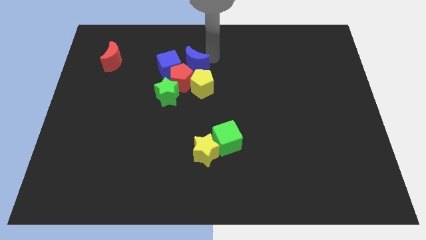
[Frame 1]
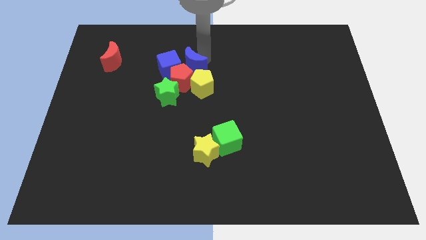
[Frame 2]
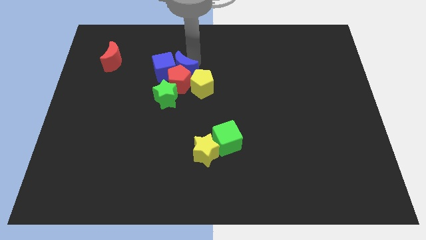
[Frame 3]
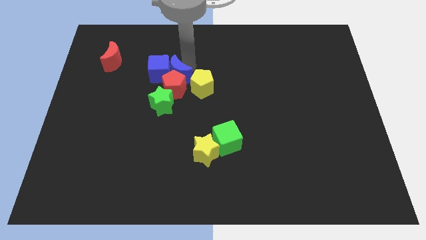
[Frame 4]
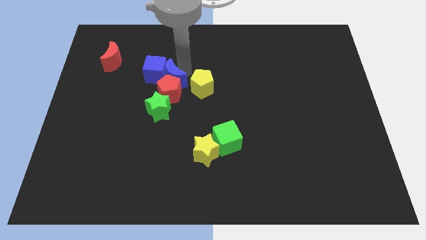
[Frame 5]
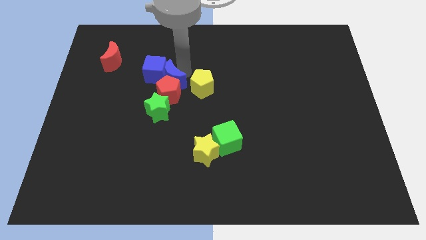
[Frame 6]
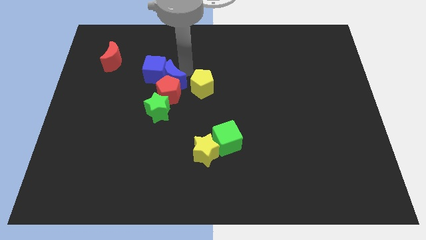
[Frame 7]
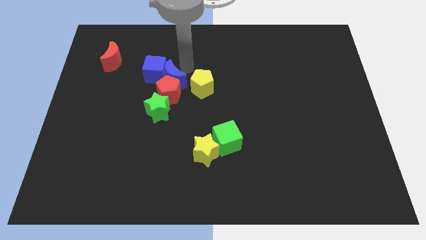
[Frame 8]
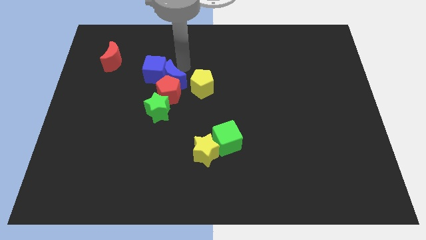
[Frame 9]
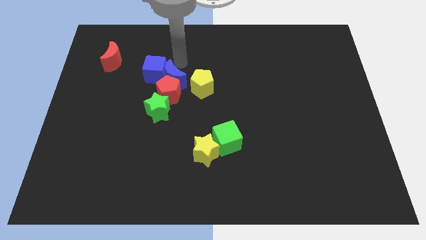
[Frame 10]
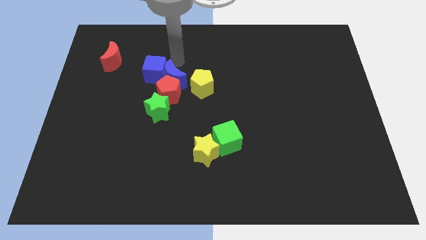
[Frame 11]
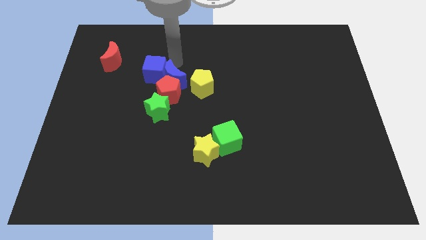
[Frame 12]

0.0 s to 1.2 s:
push the blue moon slightly to the bottom

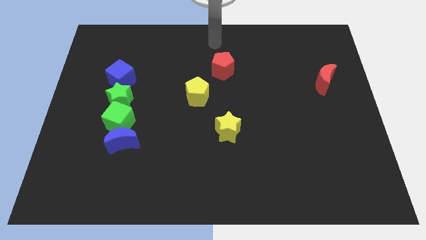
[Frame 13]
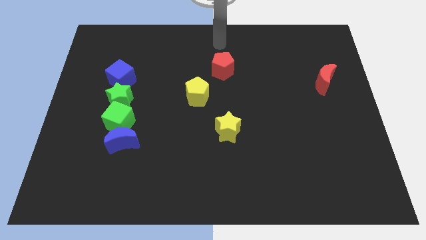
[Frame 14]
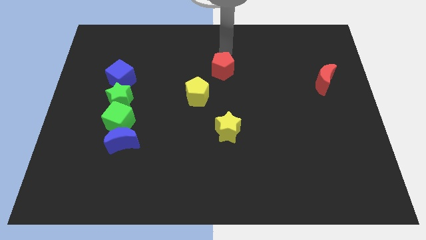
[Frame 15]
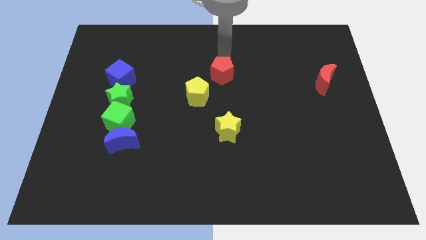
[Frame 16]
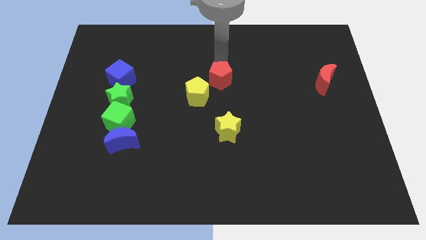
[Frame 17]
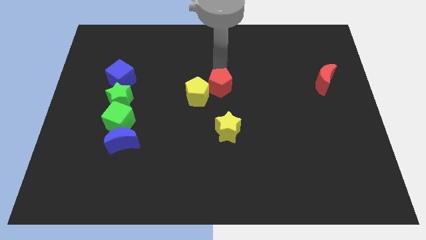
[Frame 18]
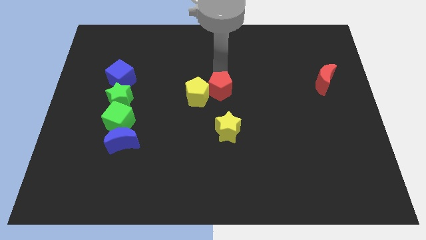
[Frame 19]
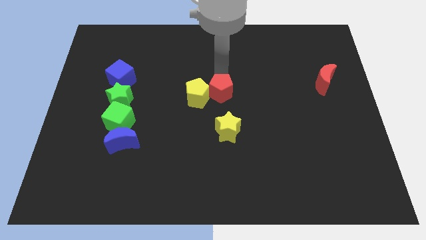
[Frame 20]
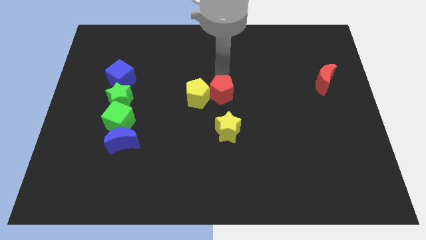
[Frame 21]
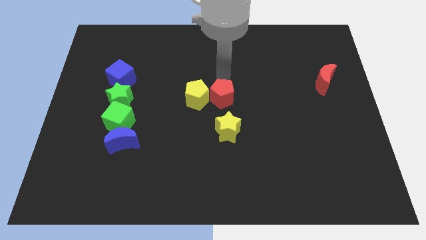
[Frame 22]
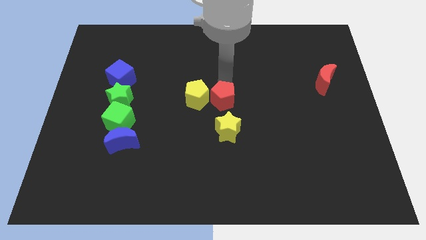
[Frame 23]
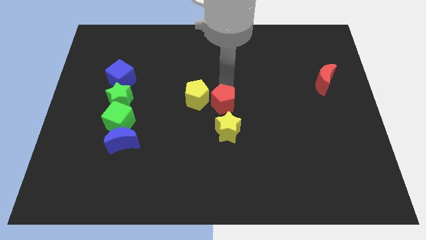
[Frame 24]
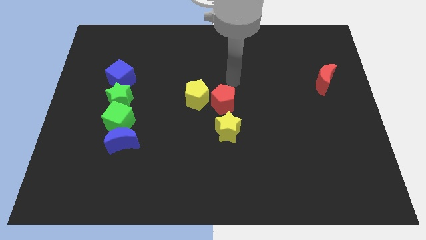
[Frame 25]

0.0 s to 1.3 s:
push the red pentagon slightly towards down

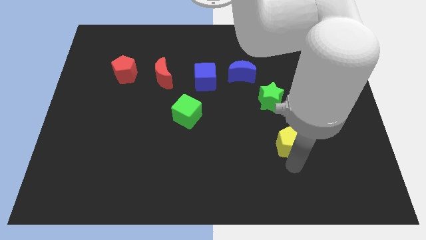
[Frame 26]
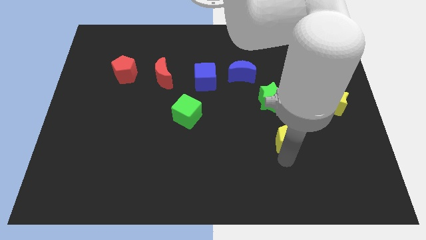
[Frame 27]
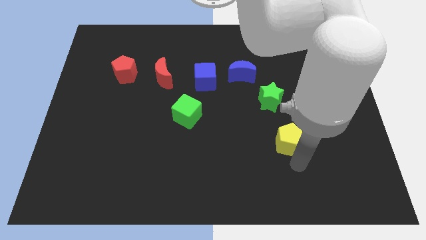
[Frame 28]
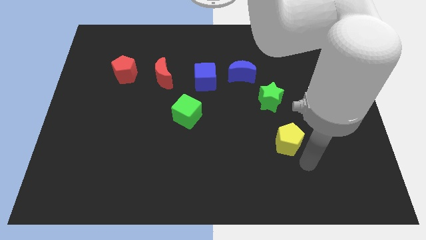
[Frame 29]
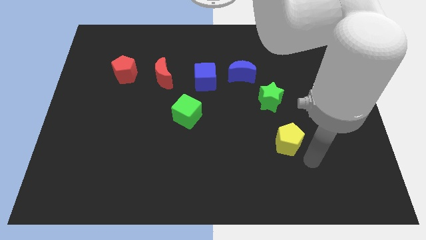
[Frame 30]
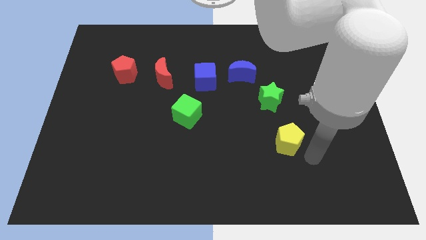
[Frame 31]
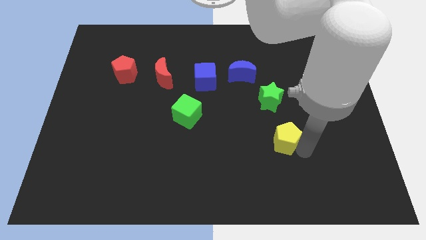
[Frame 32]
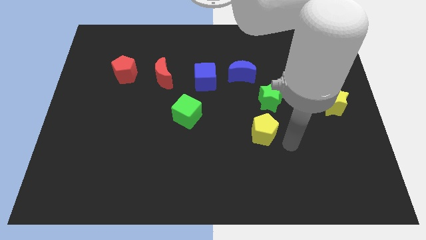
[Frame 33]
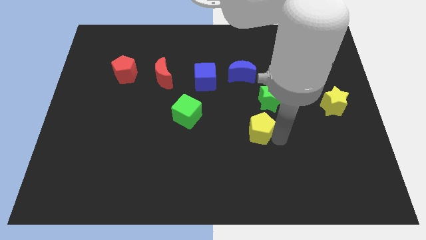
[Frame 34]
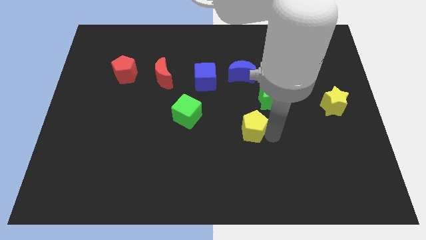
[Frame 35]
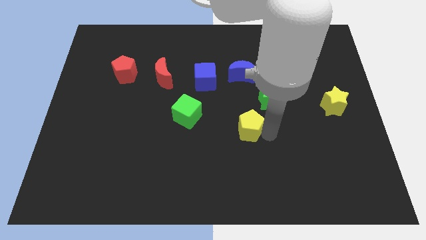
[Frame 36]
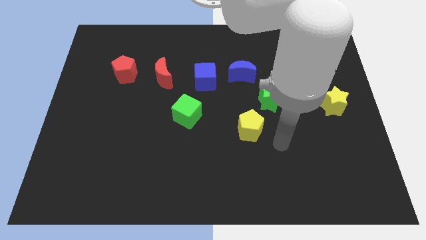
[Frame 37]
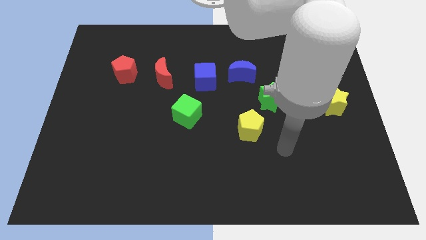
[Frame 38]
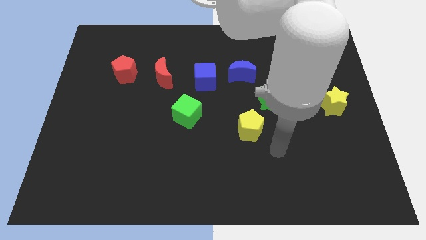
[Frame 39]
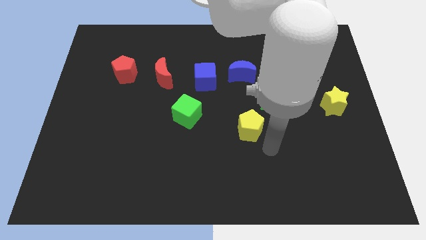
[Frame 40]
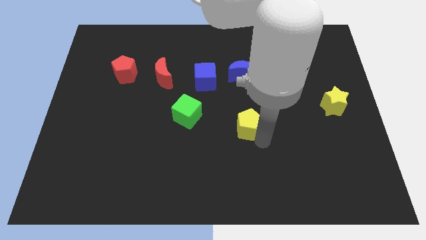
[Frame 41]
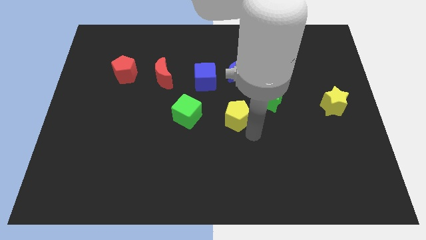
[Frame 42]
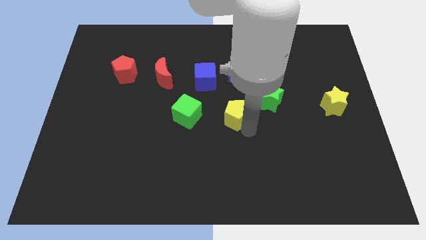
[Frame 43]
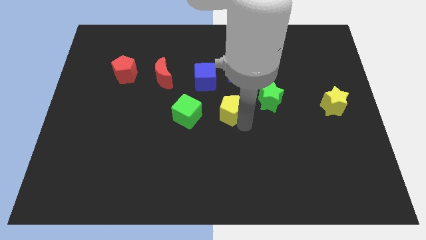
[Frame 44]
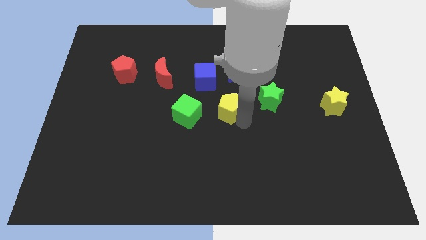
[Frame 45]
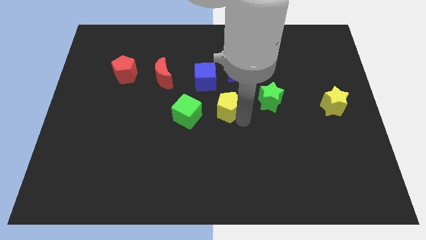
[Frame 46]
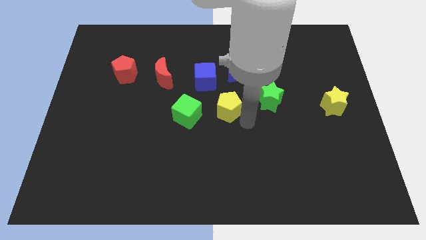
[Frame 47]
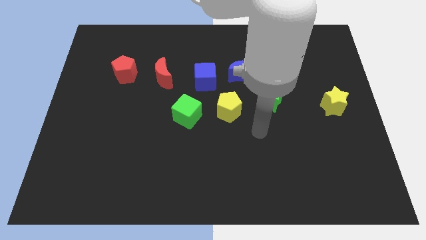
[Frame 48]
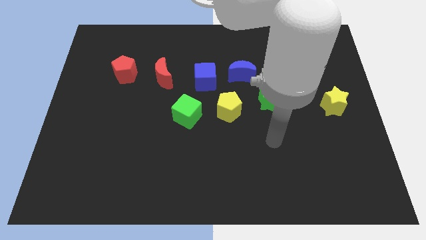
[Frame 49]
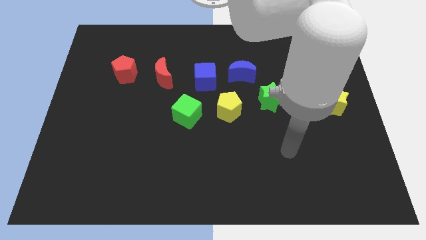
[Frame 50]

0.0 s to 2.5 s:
place the yellow pentagon in between the green blocks

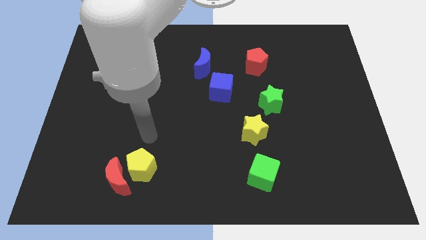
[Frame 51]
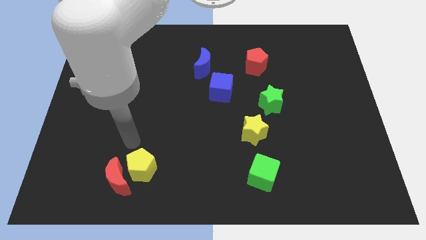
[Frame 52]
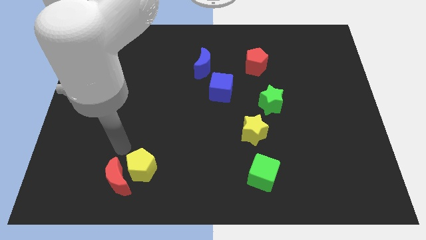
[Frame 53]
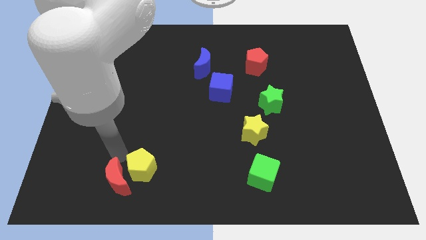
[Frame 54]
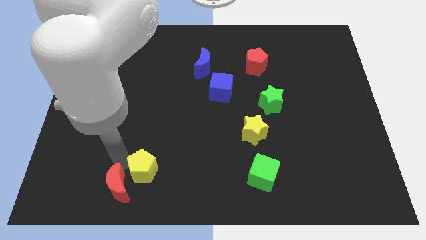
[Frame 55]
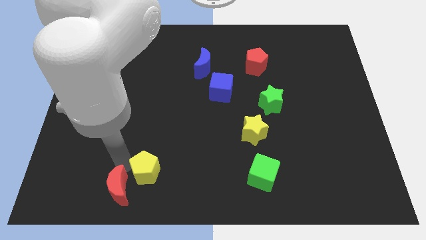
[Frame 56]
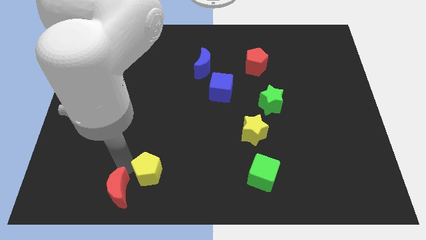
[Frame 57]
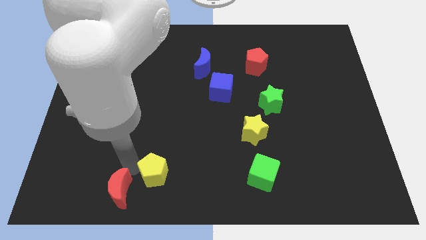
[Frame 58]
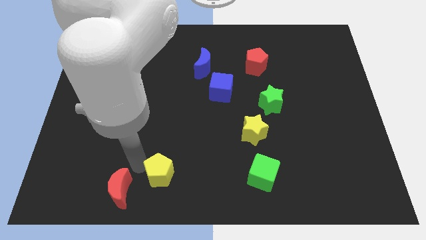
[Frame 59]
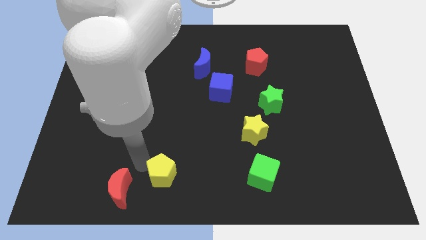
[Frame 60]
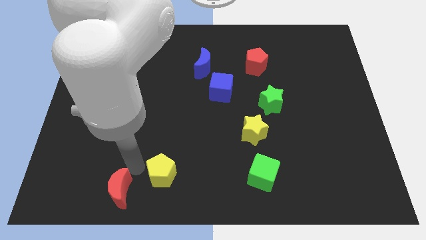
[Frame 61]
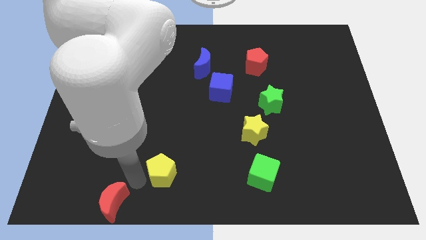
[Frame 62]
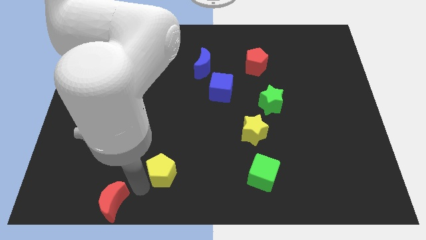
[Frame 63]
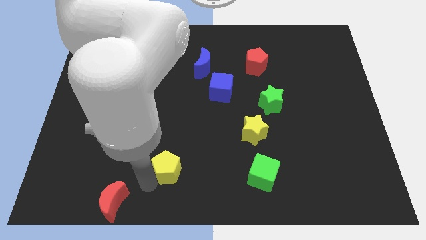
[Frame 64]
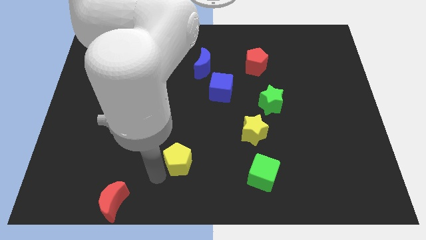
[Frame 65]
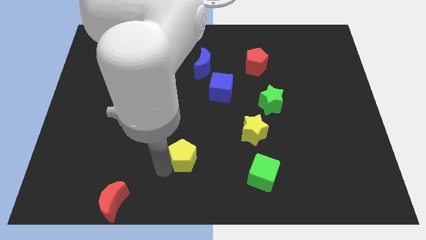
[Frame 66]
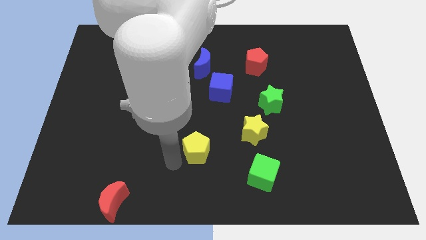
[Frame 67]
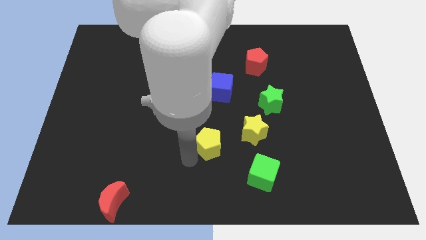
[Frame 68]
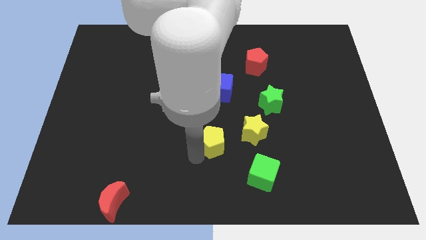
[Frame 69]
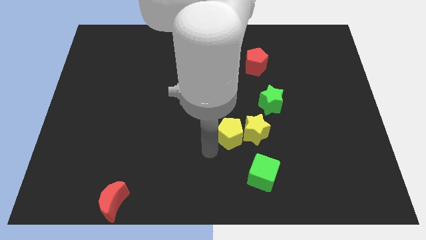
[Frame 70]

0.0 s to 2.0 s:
move the yellow pentagon into the yellow star

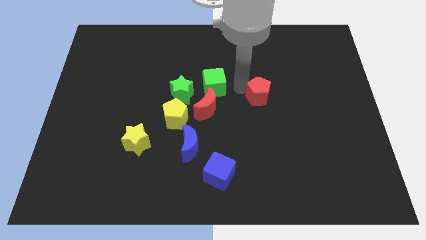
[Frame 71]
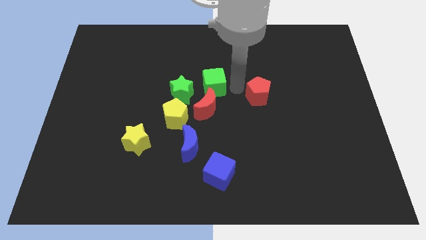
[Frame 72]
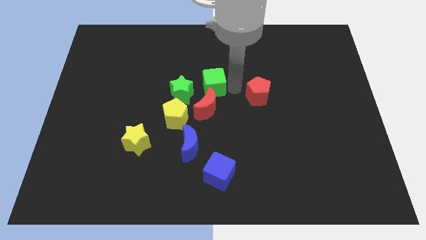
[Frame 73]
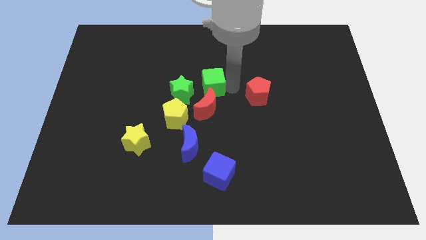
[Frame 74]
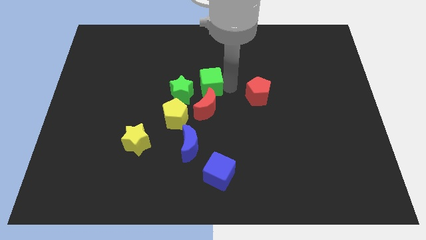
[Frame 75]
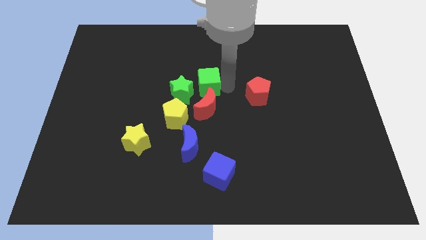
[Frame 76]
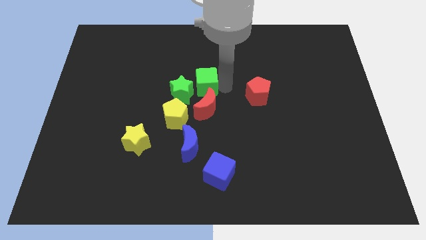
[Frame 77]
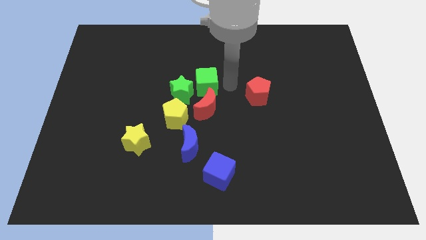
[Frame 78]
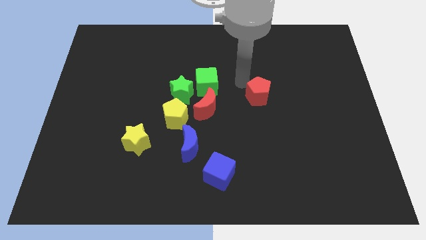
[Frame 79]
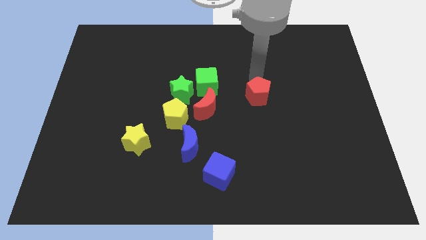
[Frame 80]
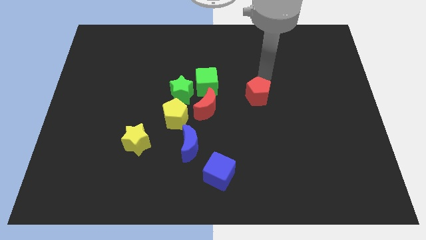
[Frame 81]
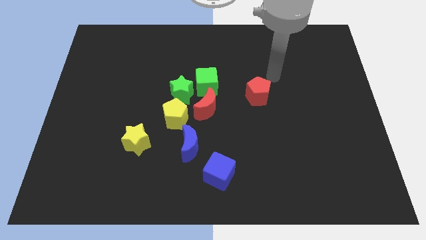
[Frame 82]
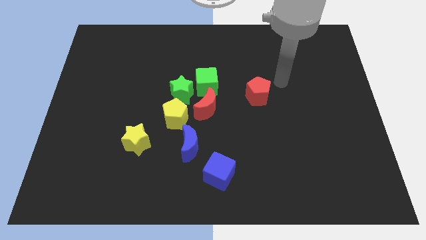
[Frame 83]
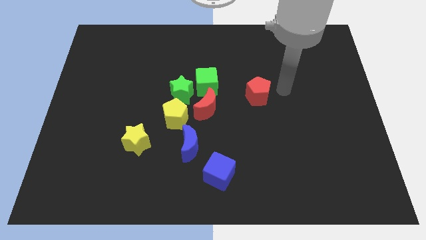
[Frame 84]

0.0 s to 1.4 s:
move the green cube slightly to the right of the green start

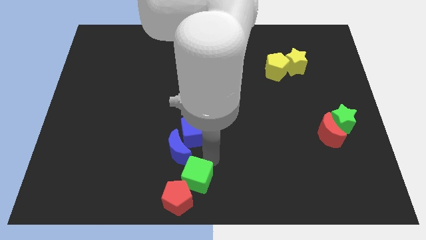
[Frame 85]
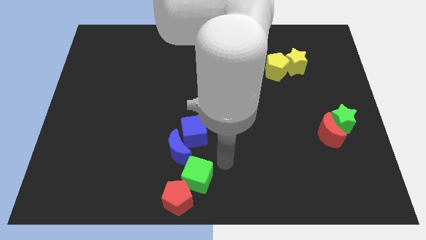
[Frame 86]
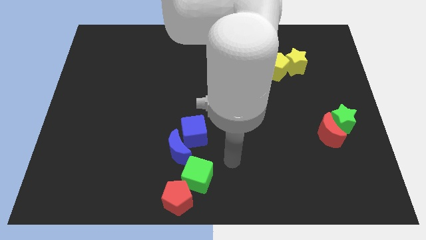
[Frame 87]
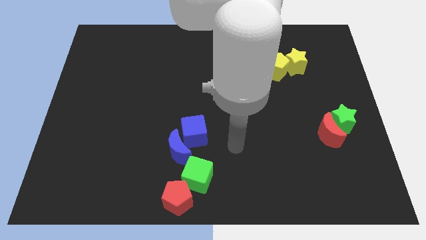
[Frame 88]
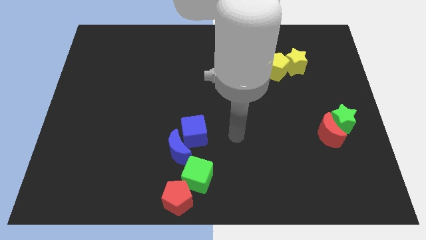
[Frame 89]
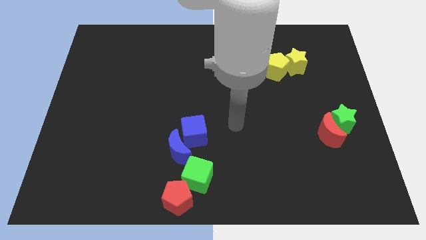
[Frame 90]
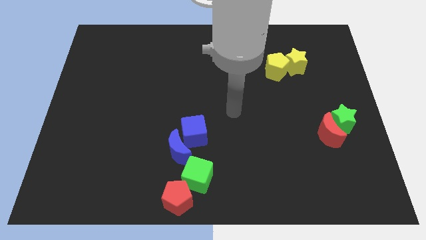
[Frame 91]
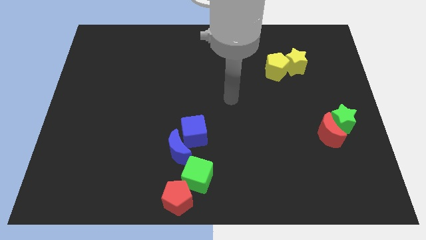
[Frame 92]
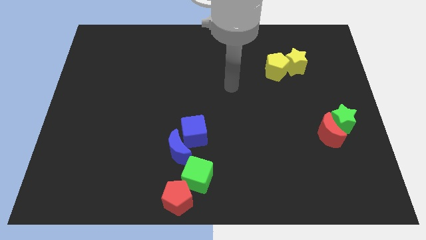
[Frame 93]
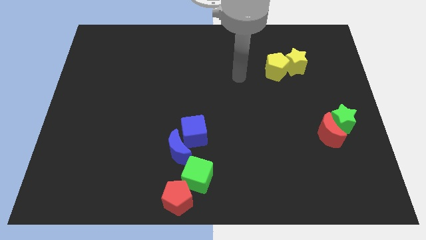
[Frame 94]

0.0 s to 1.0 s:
move your arm towards the top center of the board
